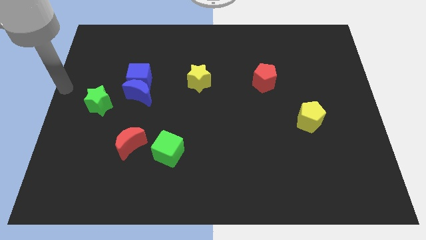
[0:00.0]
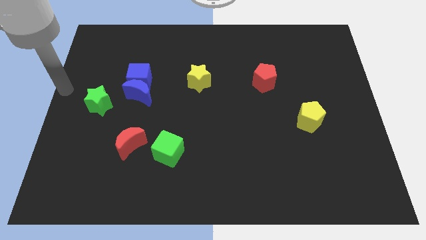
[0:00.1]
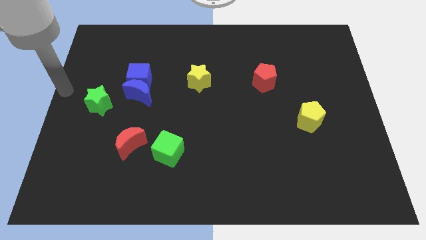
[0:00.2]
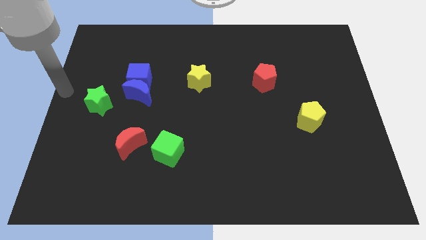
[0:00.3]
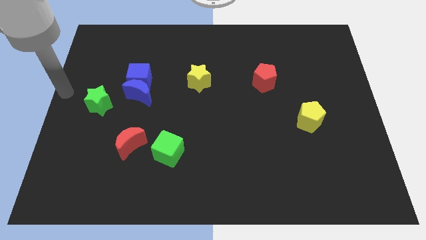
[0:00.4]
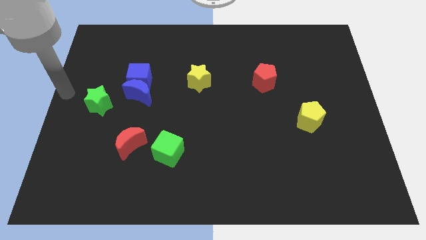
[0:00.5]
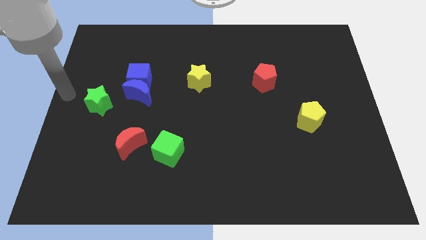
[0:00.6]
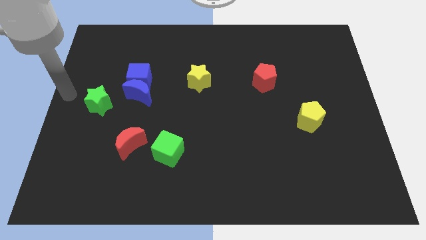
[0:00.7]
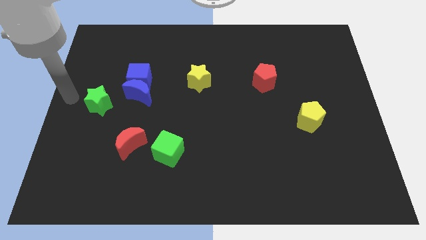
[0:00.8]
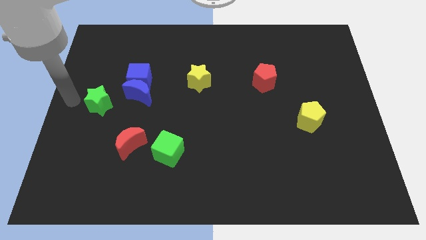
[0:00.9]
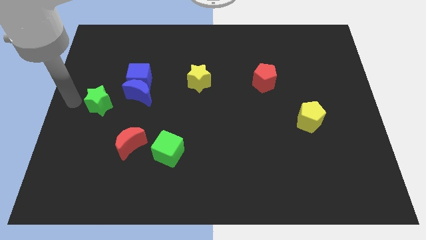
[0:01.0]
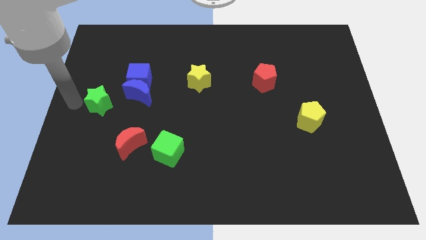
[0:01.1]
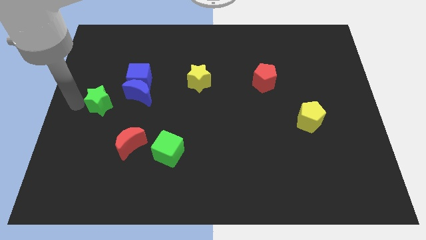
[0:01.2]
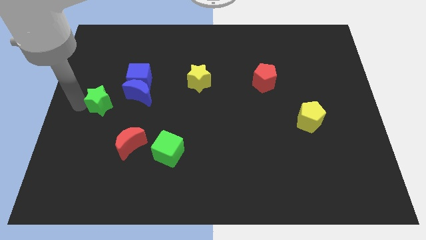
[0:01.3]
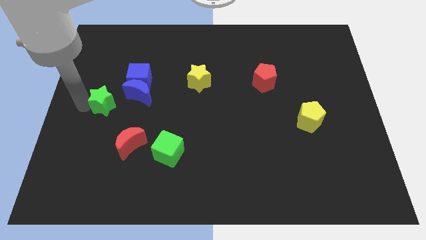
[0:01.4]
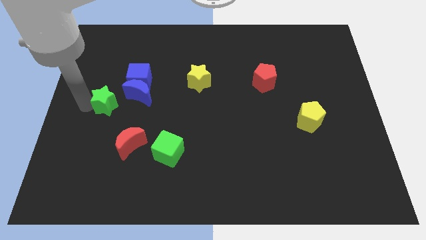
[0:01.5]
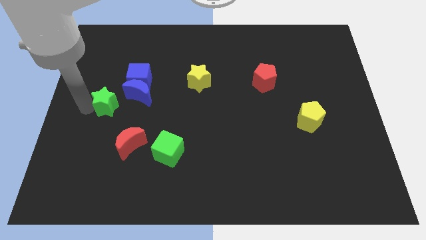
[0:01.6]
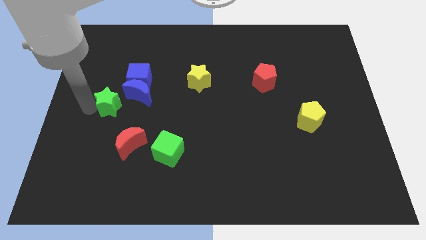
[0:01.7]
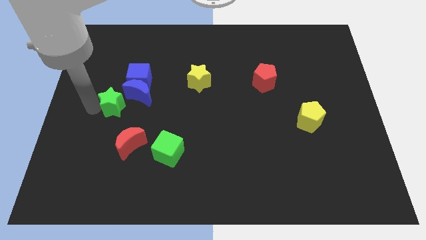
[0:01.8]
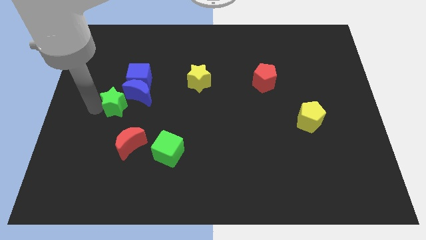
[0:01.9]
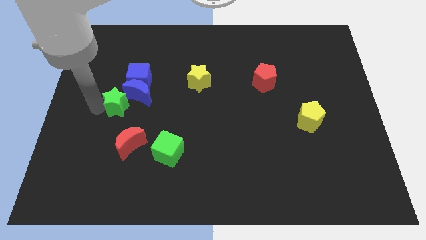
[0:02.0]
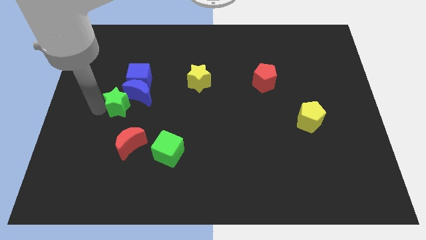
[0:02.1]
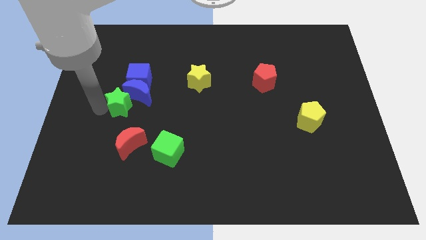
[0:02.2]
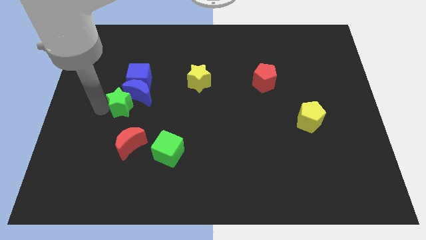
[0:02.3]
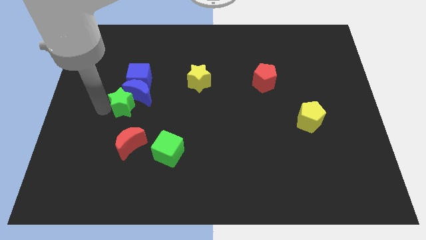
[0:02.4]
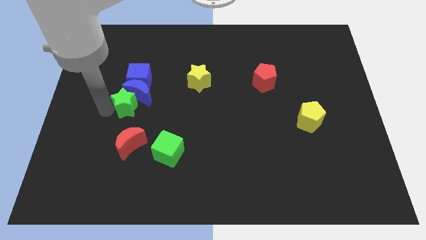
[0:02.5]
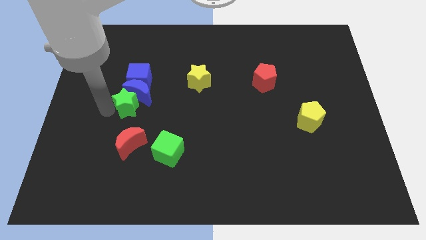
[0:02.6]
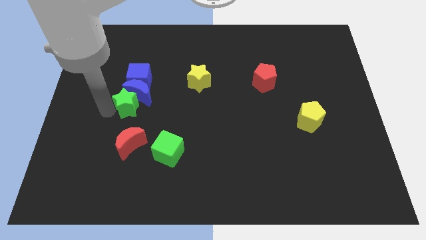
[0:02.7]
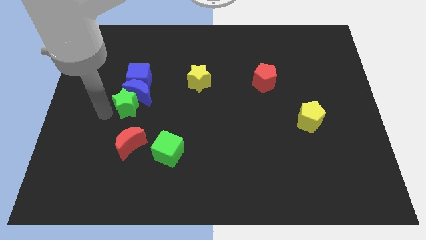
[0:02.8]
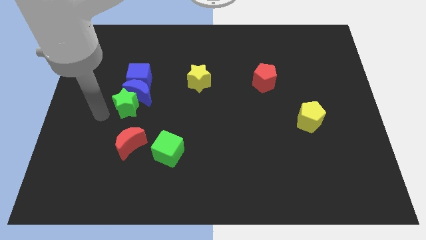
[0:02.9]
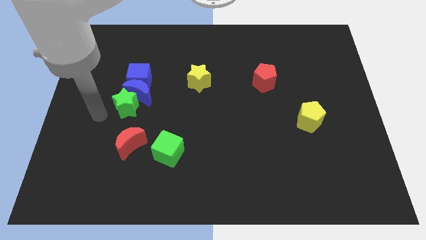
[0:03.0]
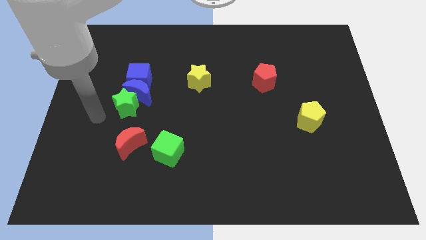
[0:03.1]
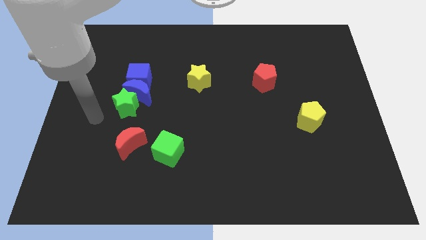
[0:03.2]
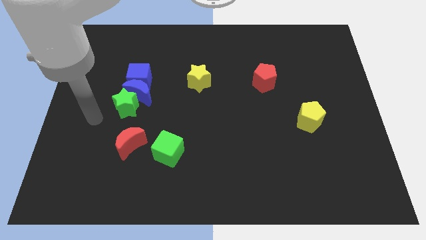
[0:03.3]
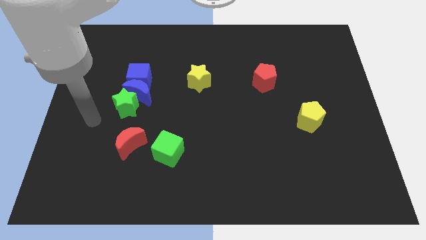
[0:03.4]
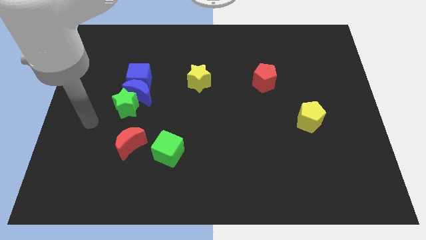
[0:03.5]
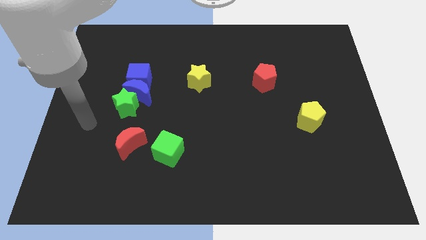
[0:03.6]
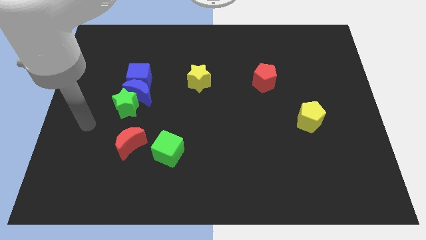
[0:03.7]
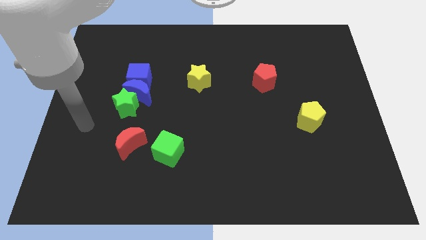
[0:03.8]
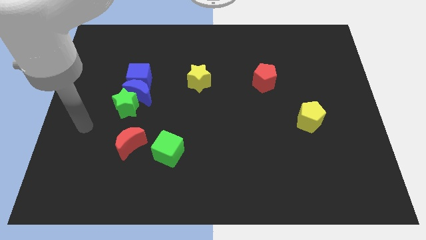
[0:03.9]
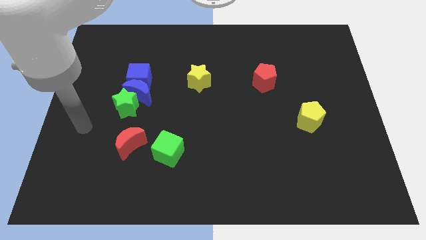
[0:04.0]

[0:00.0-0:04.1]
place green star below blue moon

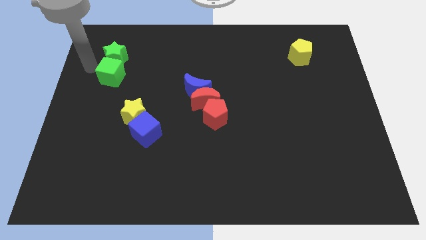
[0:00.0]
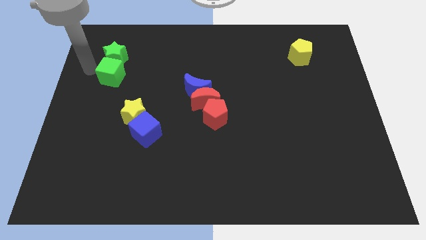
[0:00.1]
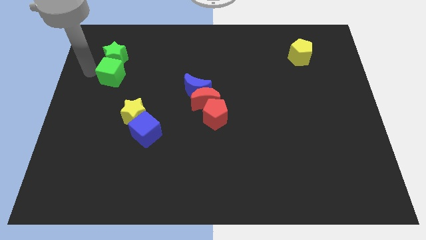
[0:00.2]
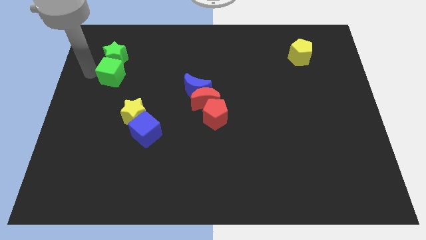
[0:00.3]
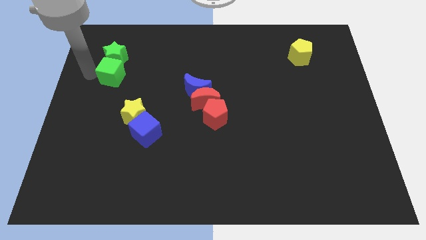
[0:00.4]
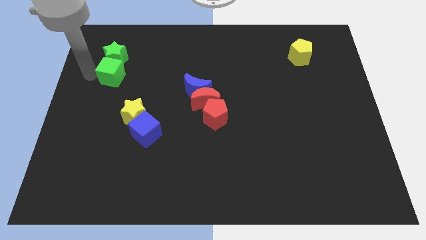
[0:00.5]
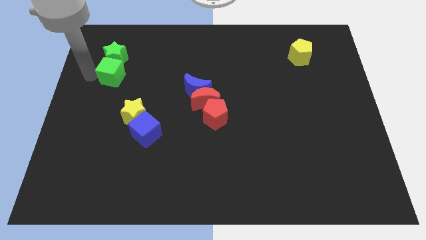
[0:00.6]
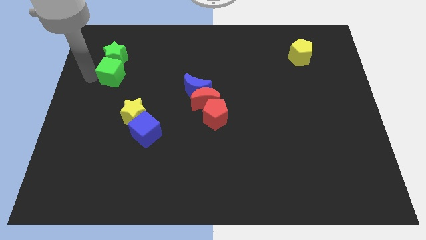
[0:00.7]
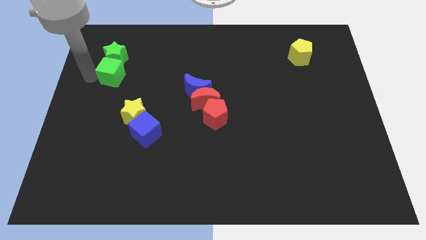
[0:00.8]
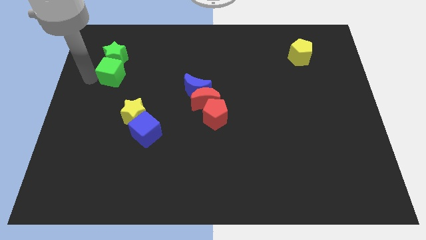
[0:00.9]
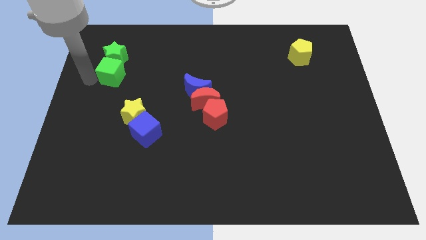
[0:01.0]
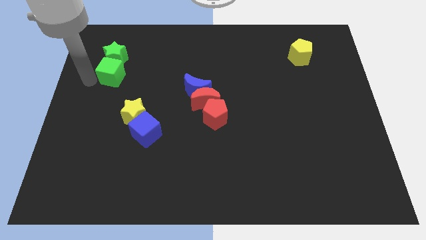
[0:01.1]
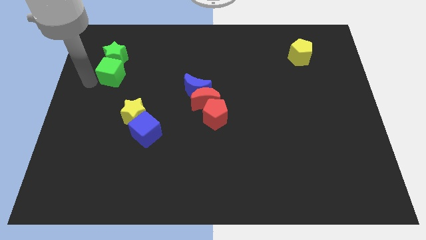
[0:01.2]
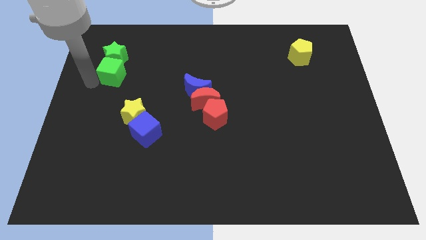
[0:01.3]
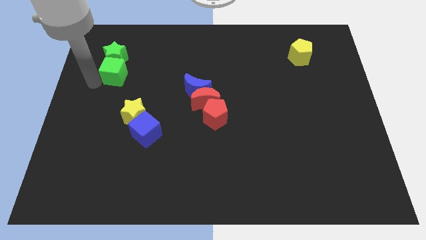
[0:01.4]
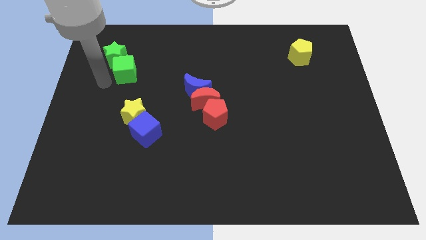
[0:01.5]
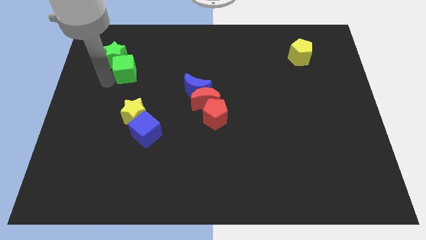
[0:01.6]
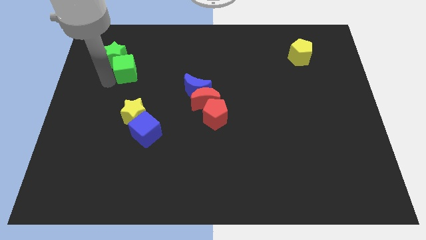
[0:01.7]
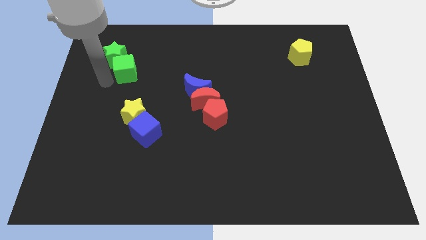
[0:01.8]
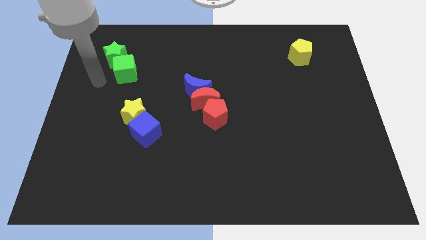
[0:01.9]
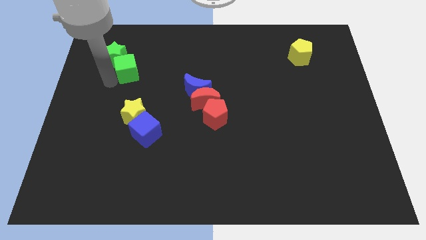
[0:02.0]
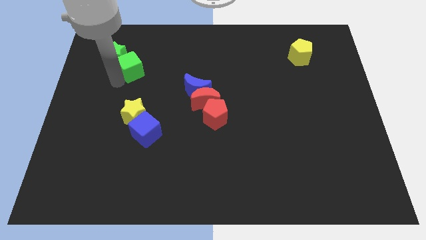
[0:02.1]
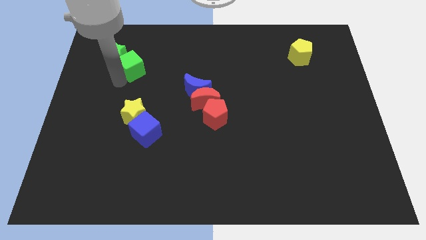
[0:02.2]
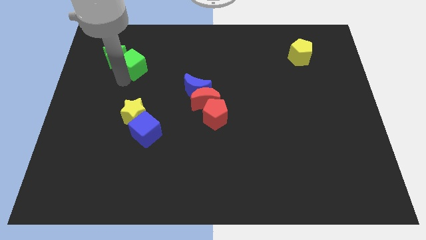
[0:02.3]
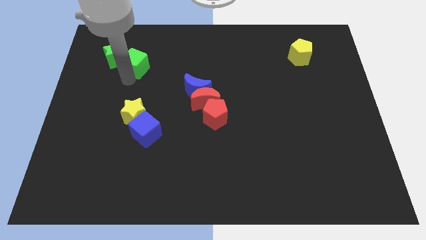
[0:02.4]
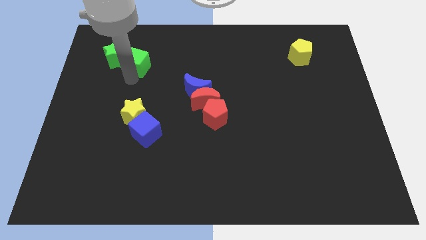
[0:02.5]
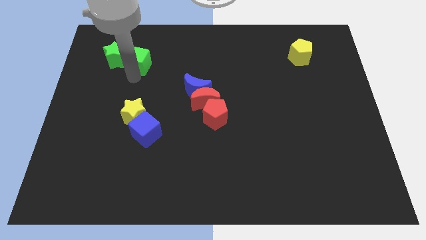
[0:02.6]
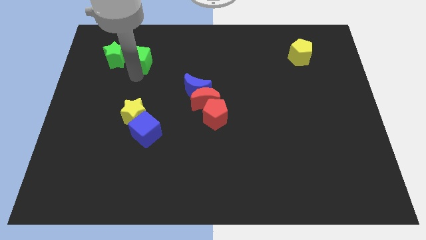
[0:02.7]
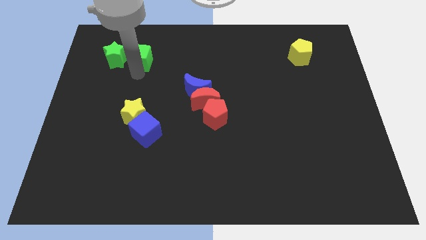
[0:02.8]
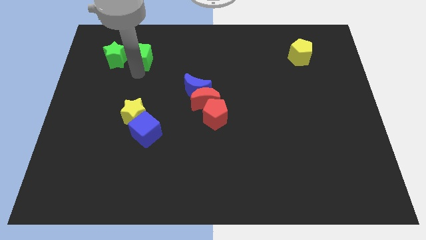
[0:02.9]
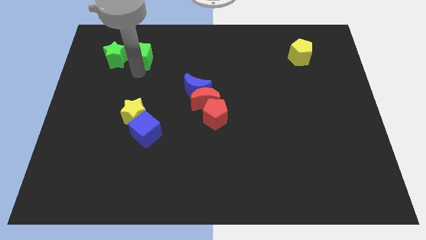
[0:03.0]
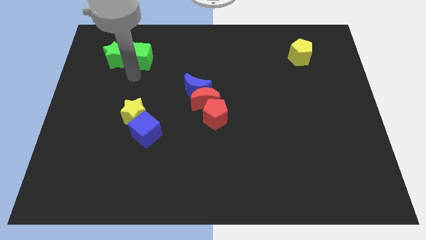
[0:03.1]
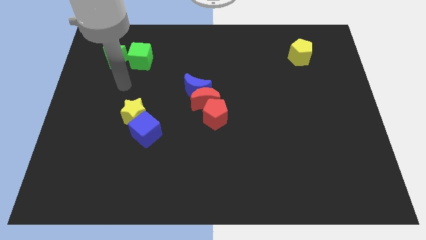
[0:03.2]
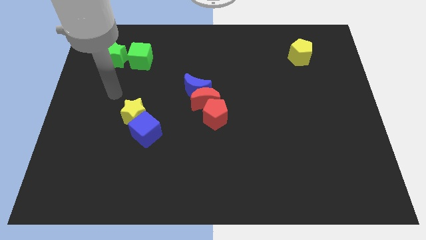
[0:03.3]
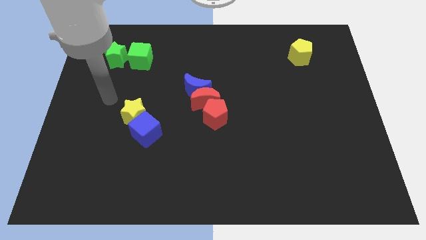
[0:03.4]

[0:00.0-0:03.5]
move the green cube right to the green star

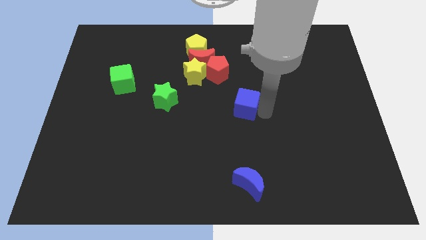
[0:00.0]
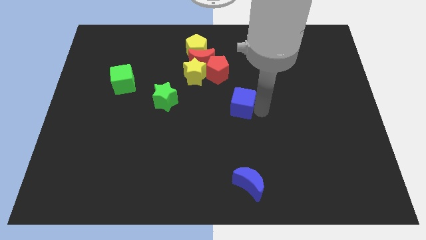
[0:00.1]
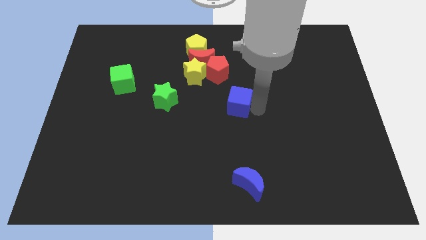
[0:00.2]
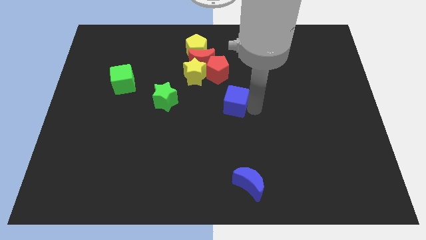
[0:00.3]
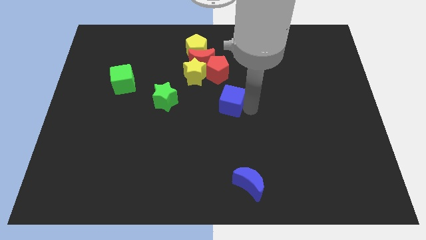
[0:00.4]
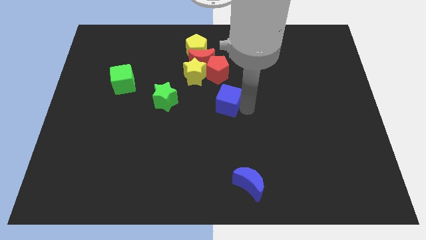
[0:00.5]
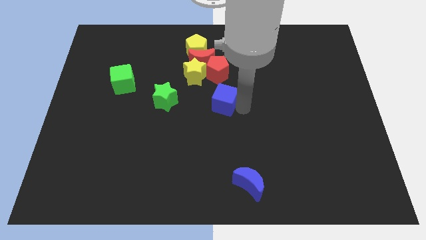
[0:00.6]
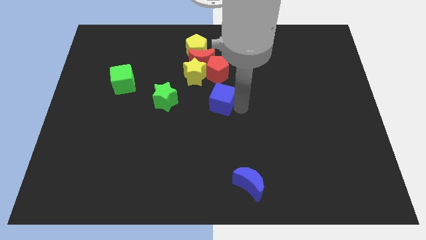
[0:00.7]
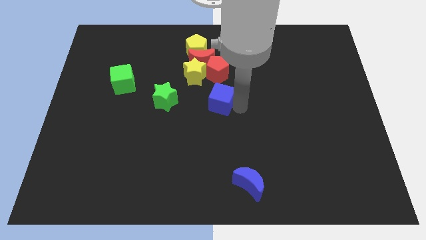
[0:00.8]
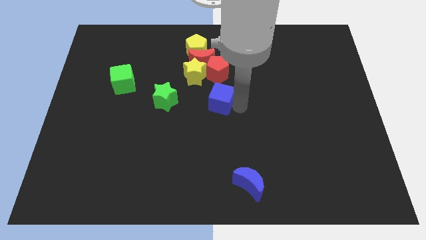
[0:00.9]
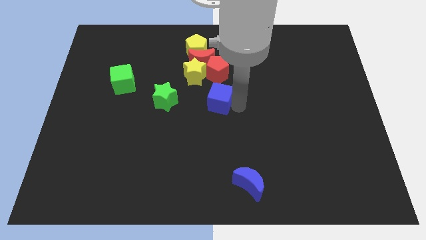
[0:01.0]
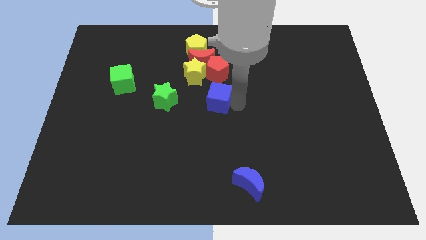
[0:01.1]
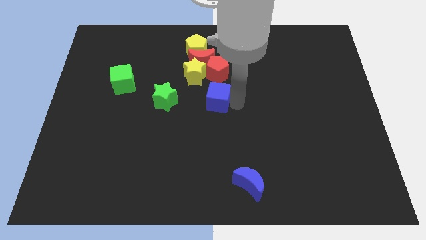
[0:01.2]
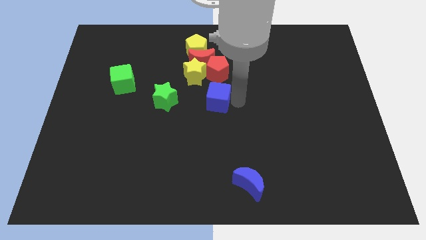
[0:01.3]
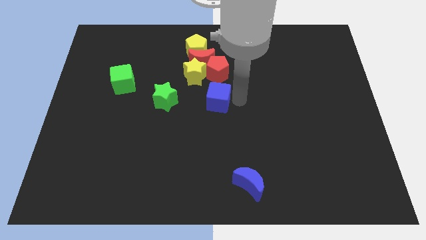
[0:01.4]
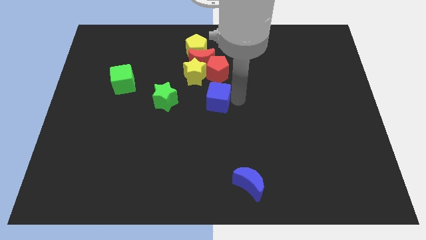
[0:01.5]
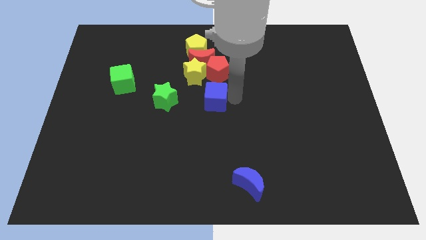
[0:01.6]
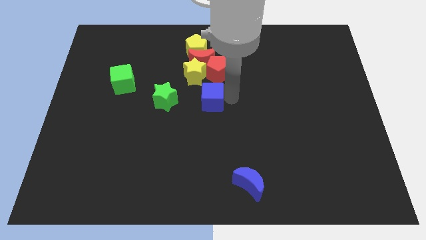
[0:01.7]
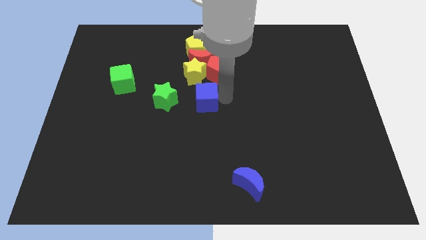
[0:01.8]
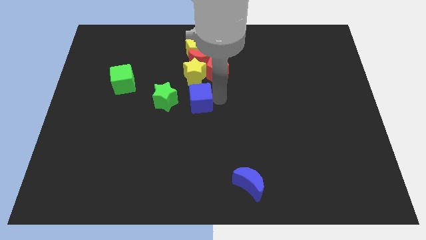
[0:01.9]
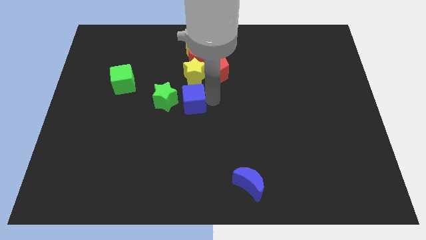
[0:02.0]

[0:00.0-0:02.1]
slide the blue cube vertically below the yellow star
